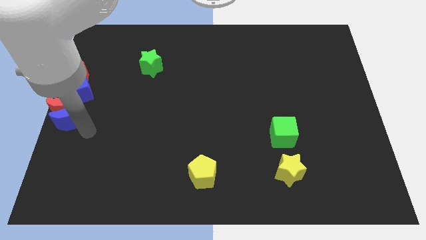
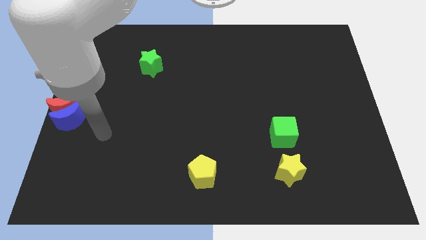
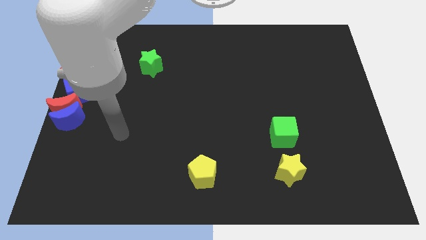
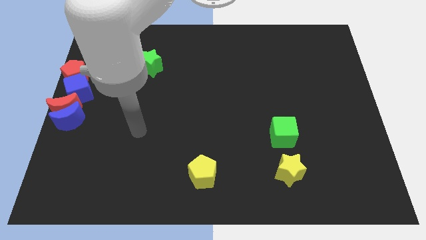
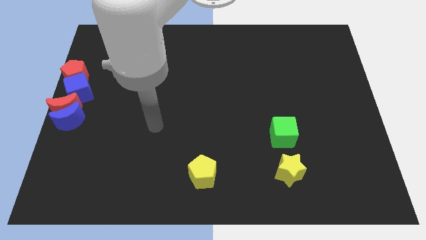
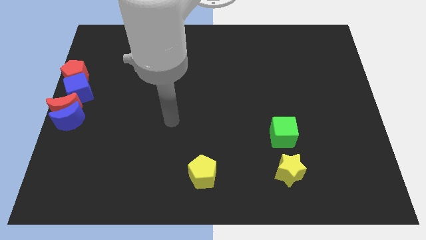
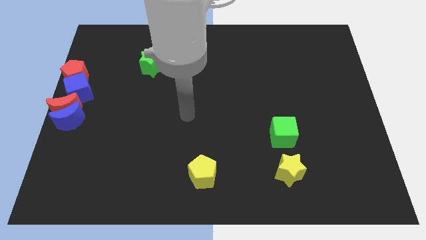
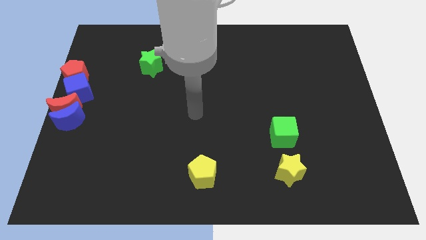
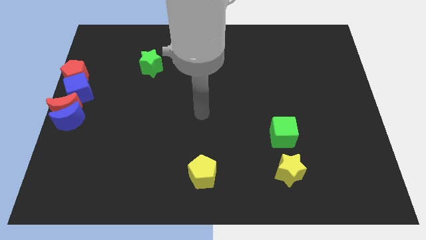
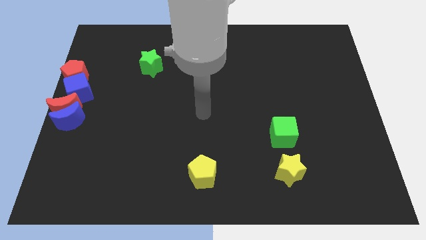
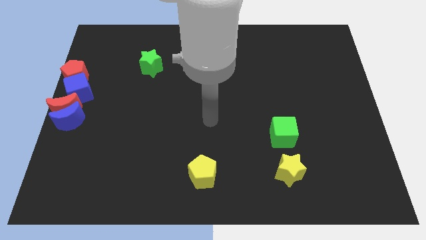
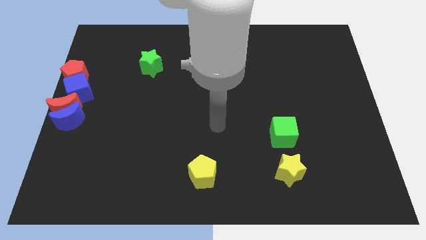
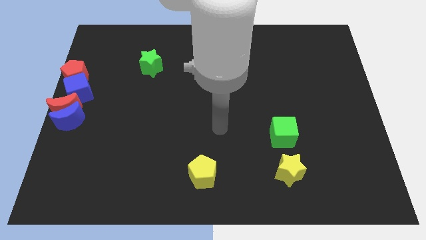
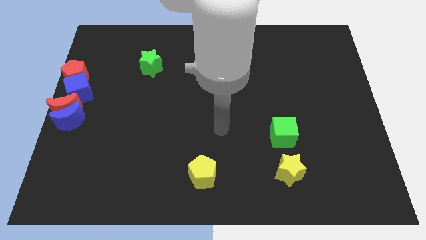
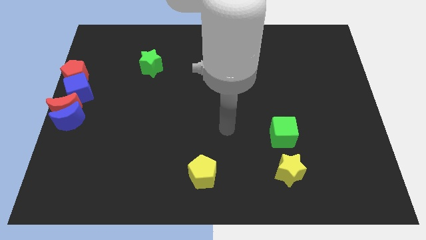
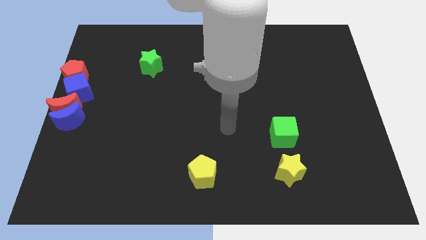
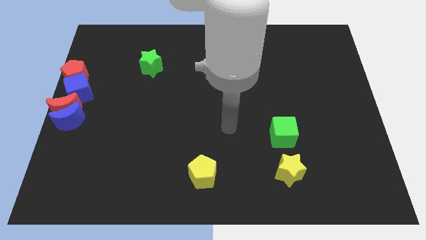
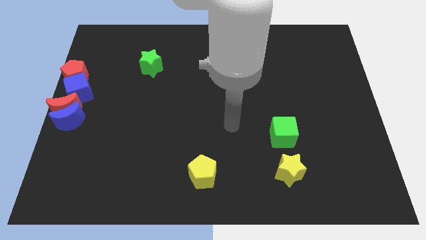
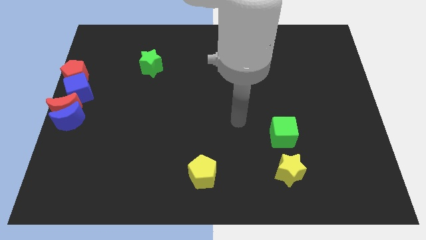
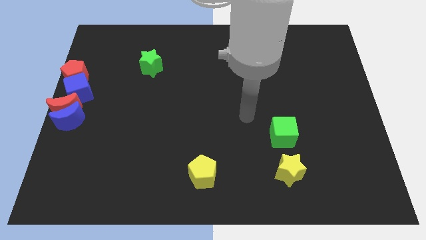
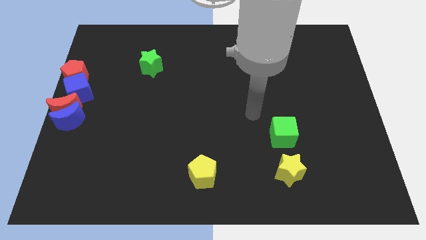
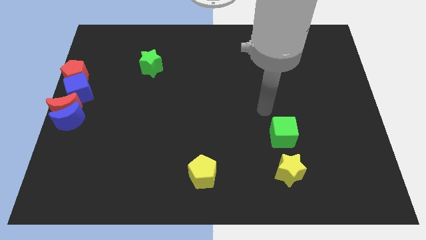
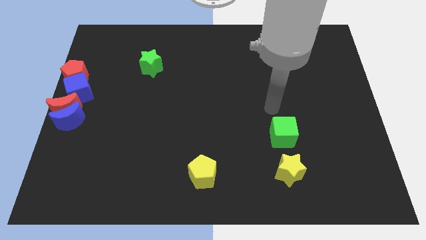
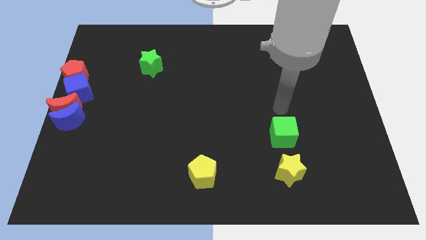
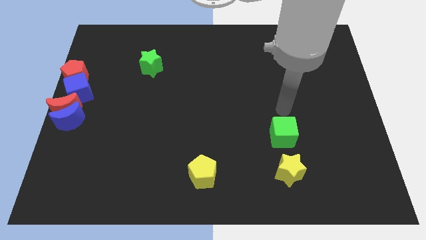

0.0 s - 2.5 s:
point your arm at the top of green cube

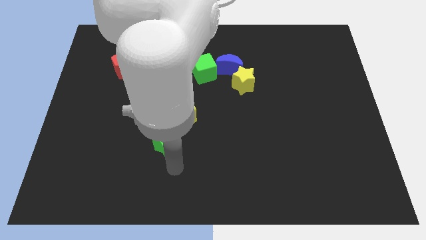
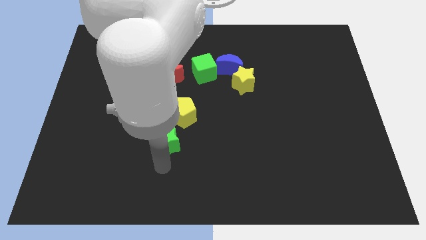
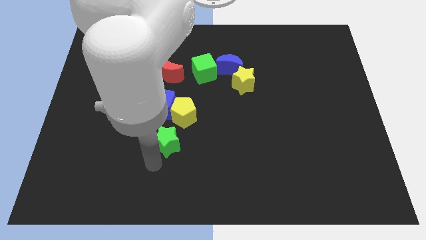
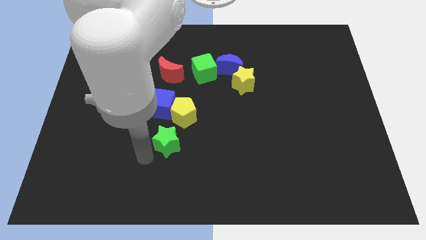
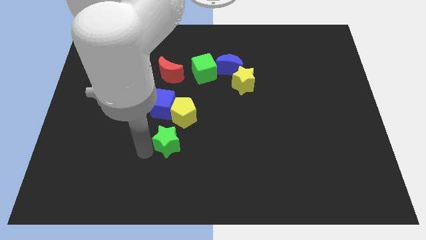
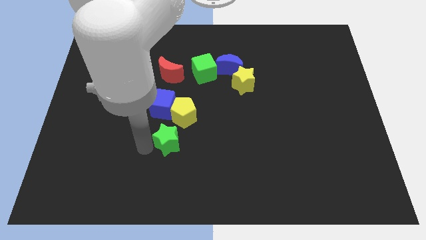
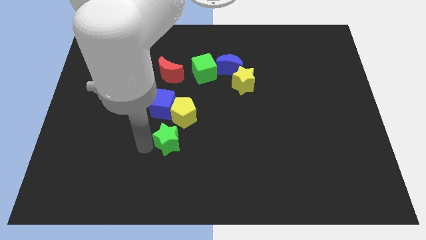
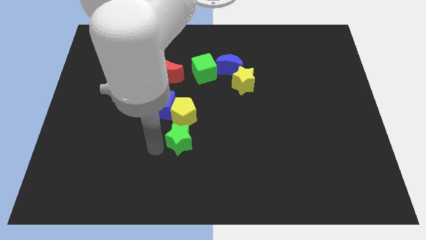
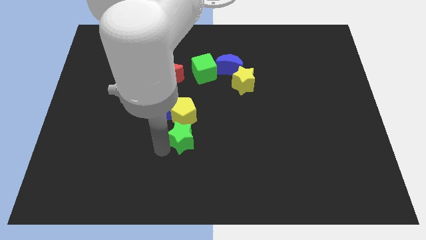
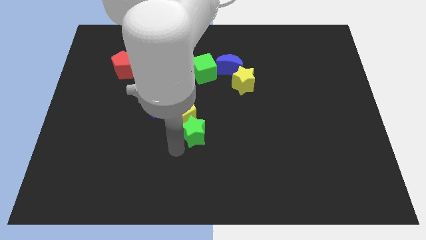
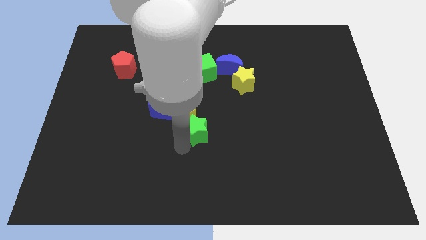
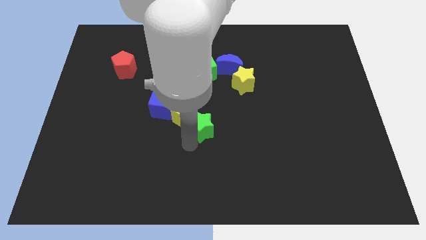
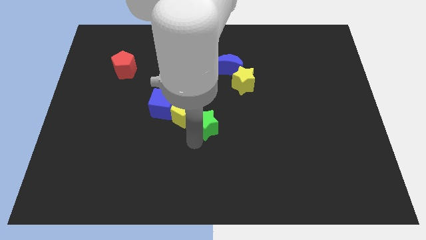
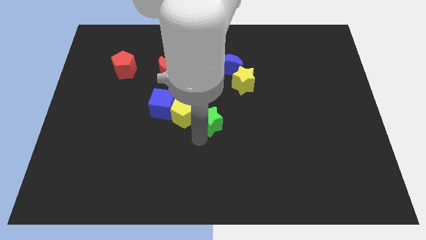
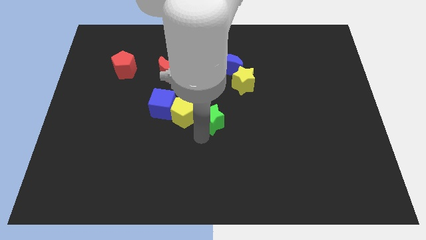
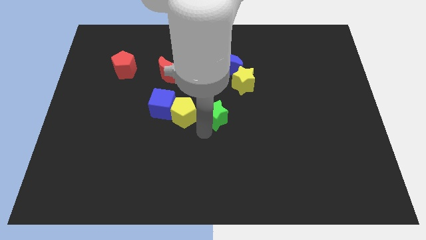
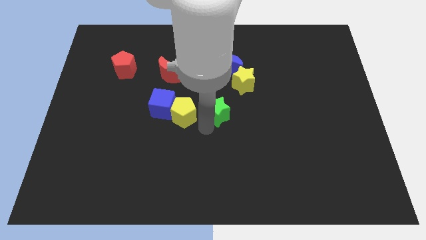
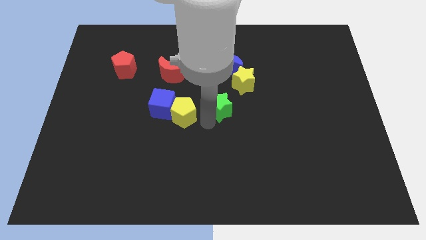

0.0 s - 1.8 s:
place the green star at the right side of the yellow pentagon

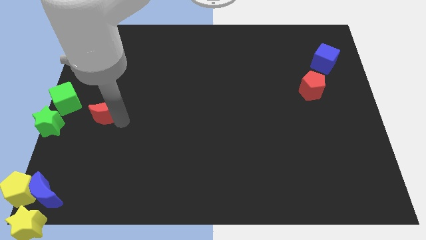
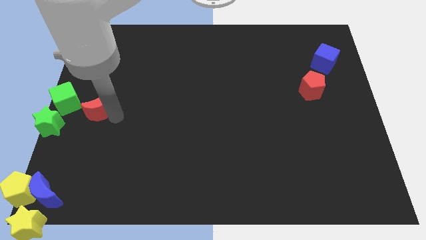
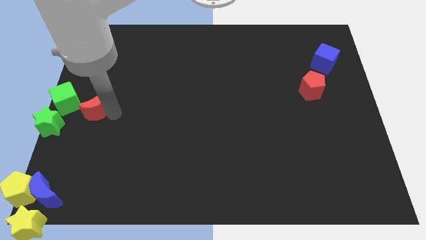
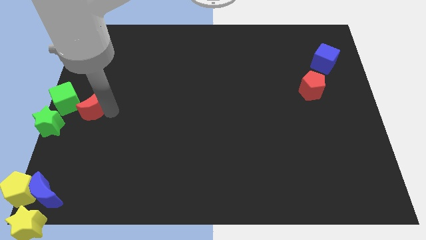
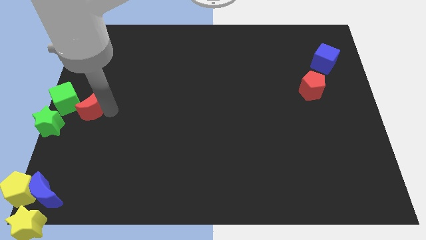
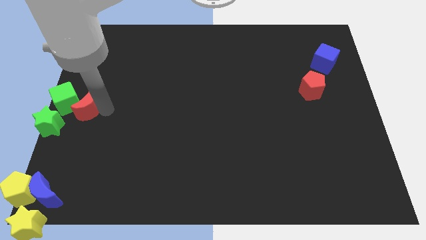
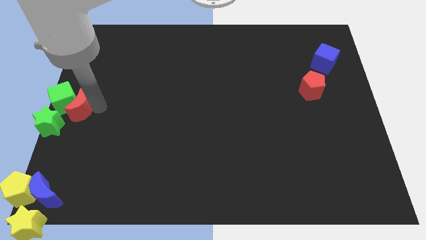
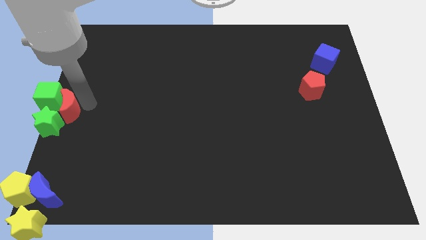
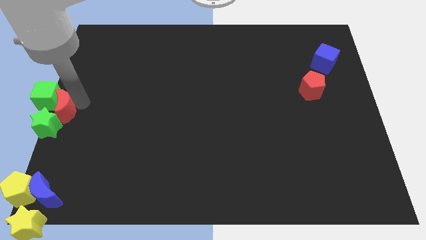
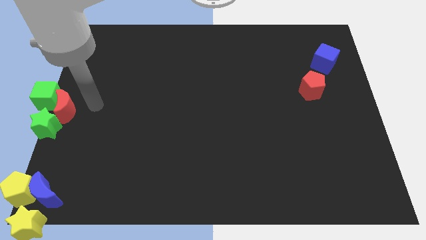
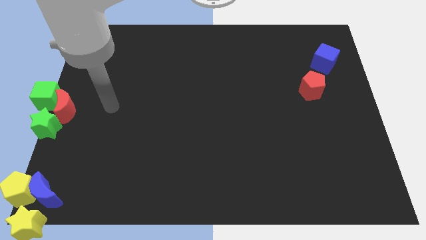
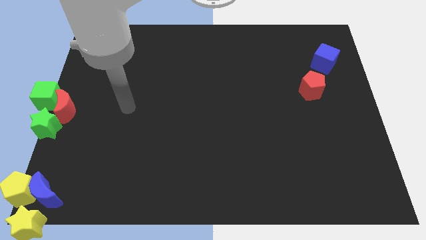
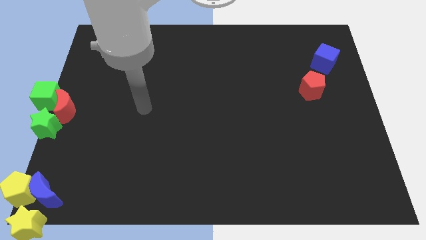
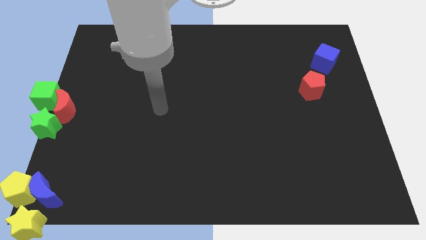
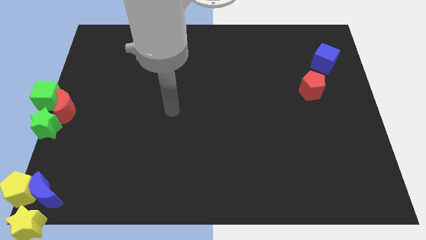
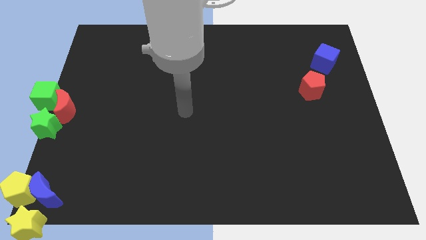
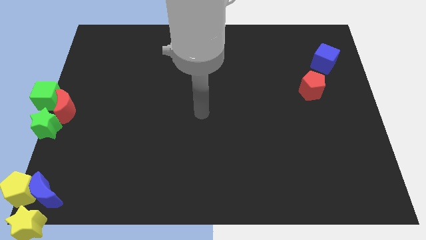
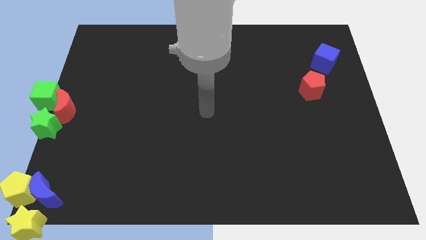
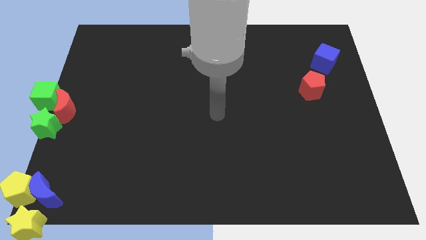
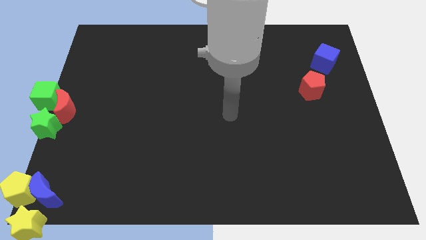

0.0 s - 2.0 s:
push the red crescent to the right of the green blocks

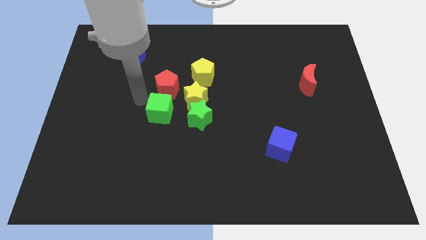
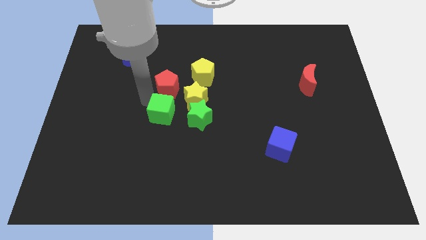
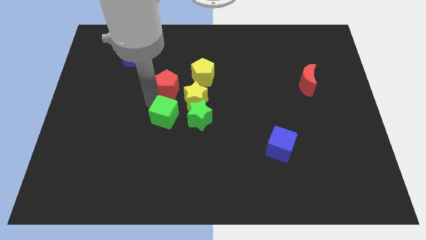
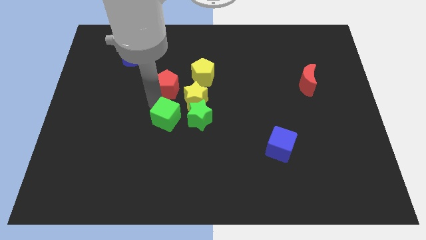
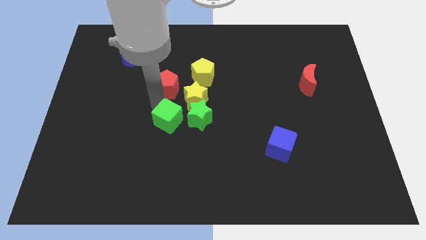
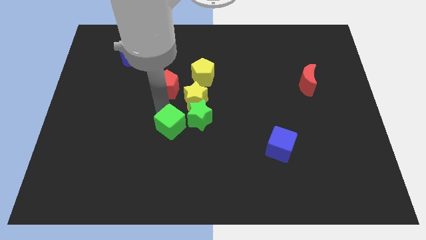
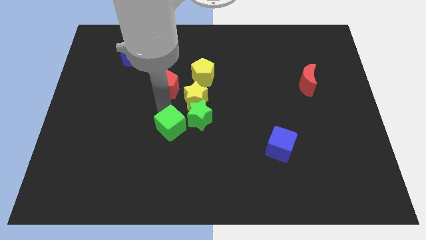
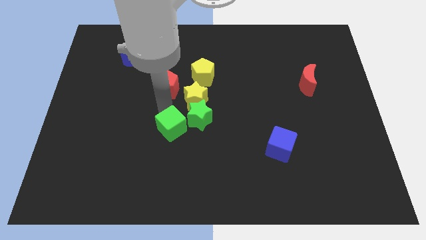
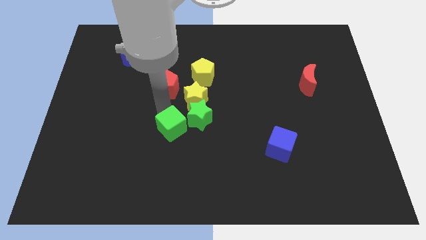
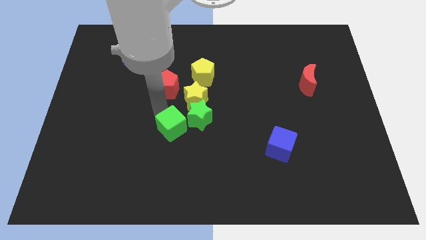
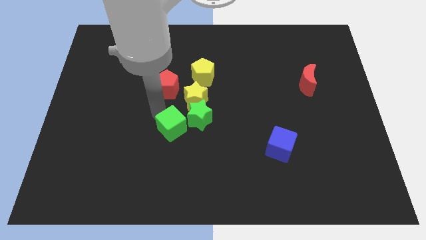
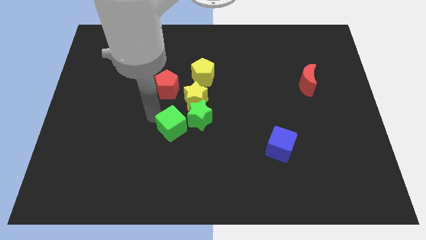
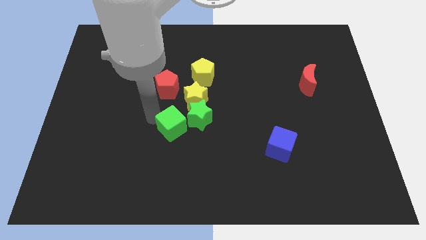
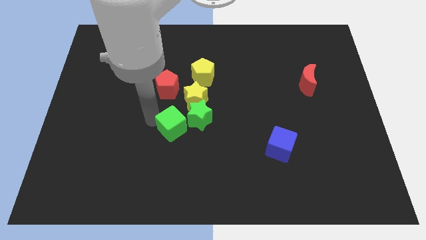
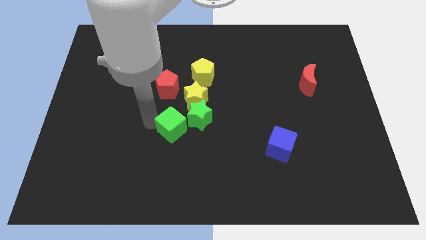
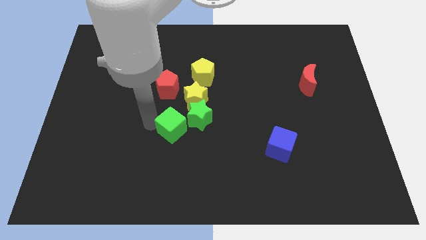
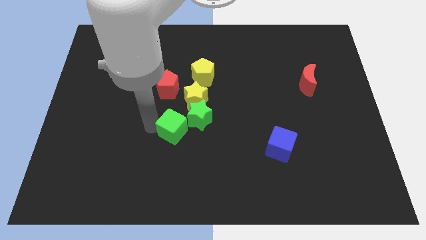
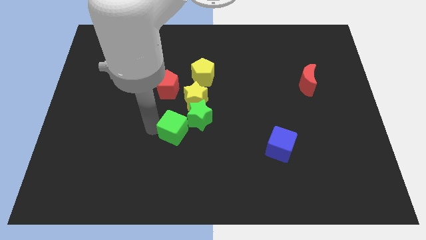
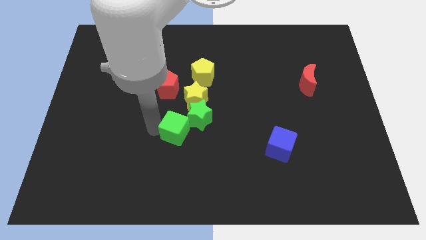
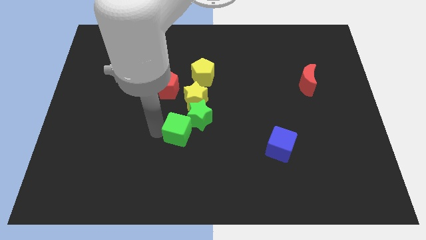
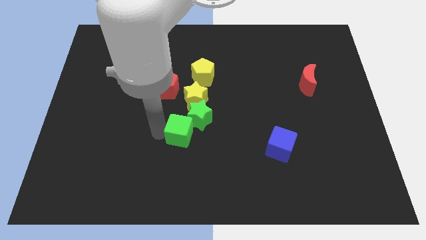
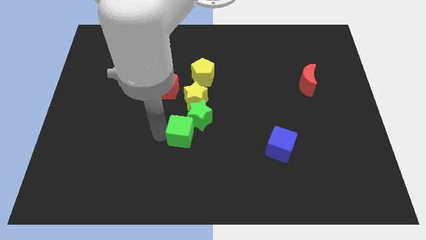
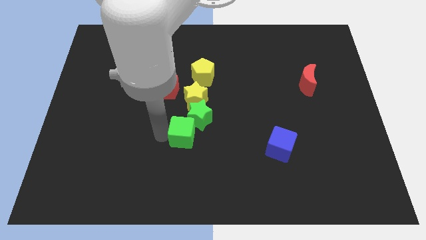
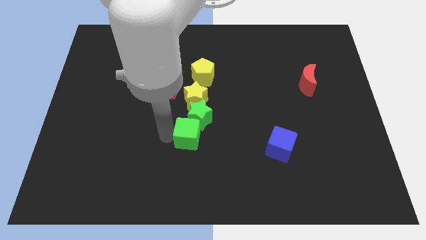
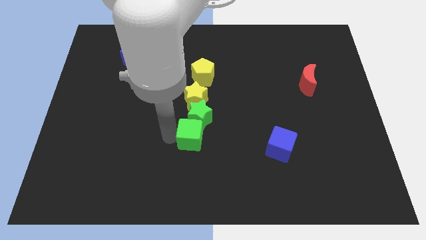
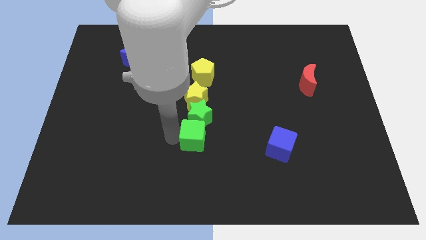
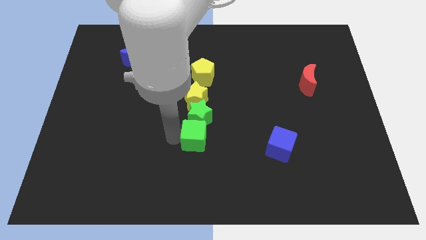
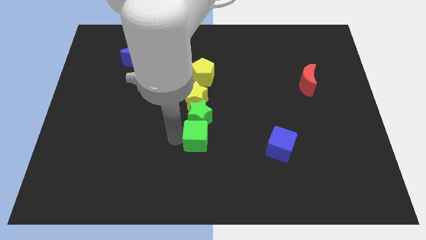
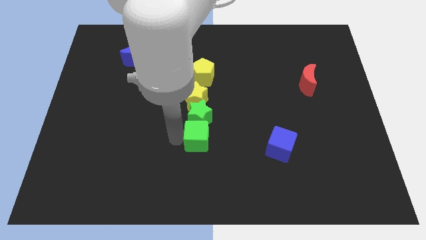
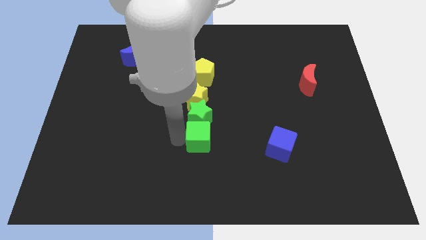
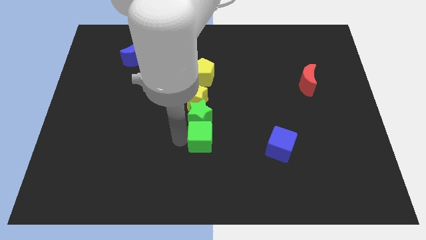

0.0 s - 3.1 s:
push the green cube to the bottom of the green star
